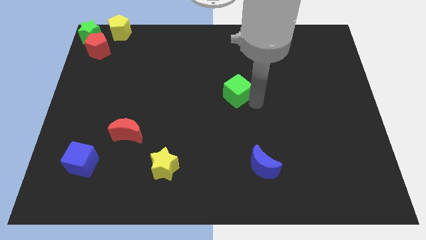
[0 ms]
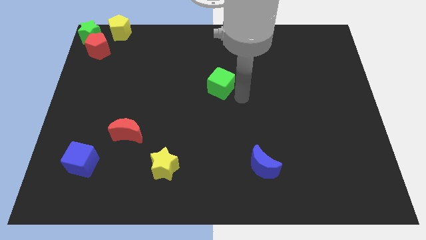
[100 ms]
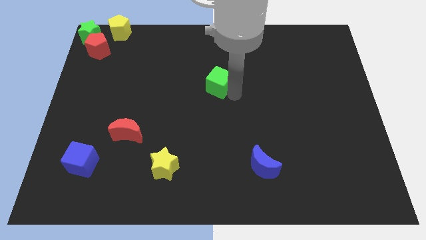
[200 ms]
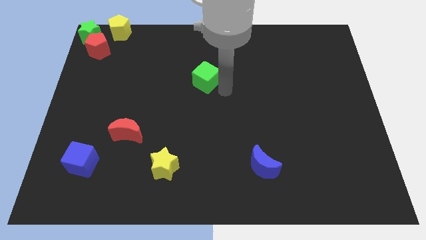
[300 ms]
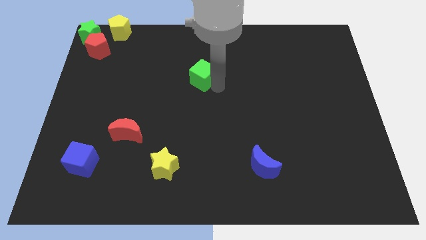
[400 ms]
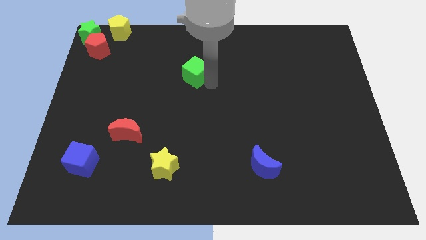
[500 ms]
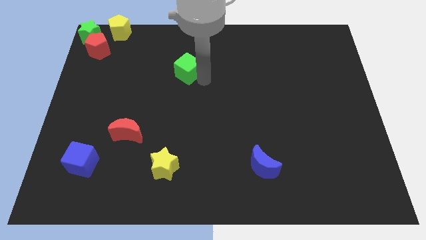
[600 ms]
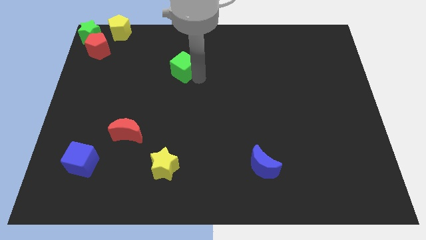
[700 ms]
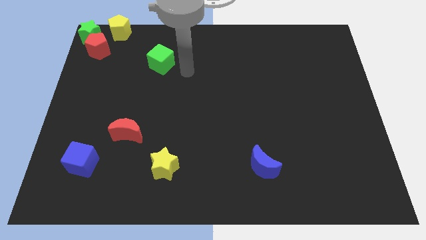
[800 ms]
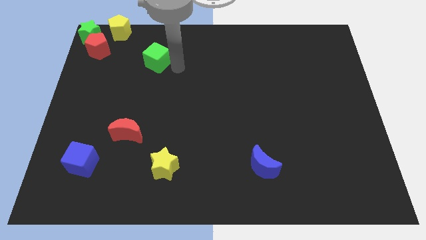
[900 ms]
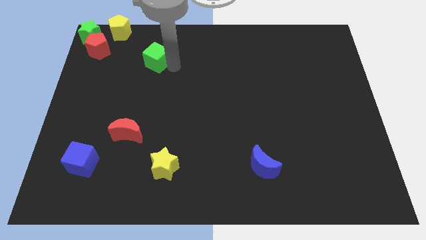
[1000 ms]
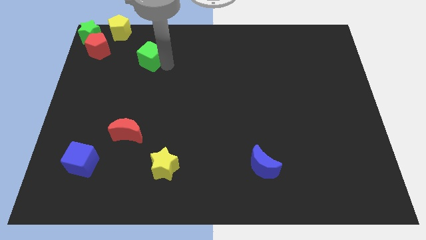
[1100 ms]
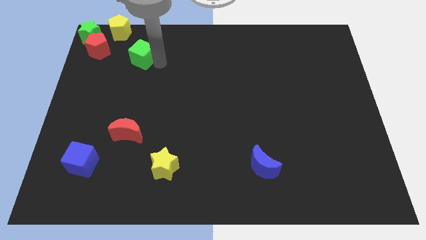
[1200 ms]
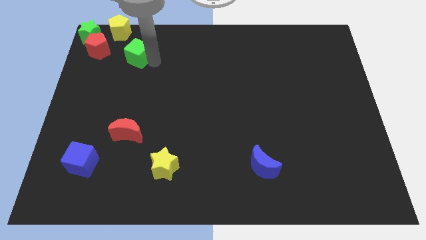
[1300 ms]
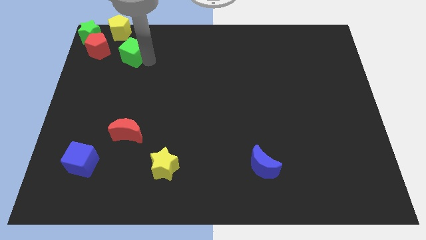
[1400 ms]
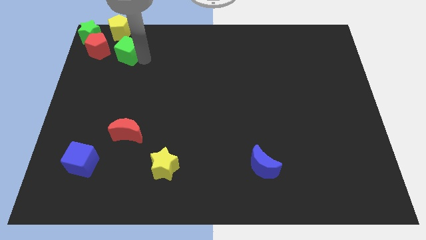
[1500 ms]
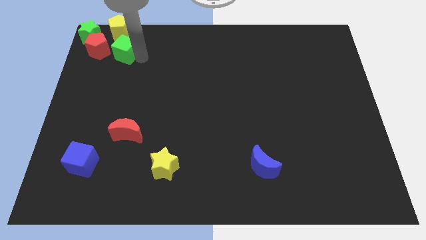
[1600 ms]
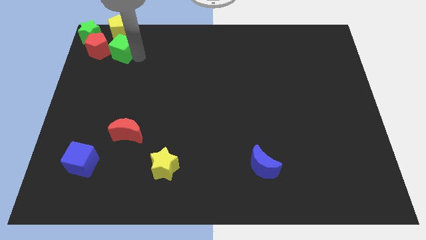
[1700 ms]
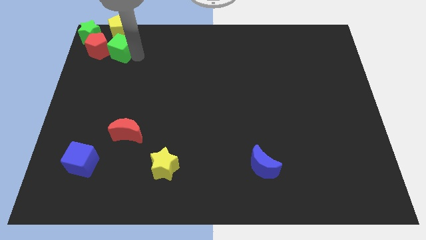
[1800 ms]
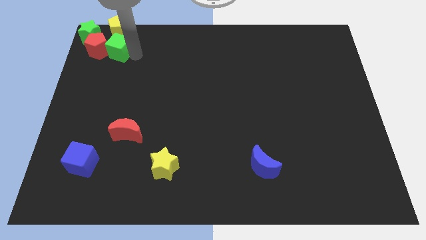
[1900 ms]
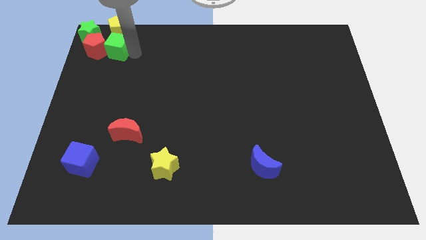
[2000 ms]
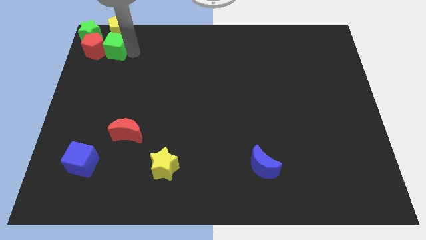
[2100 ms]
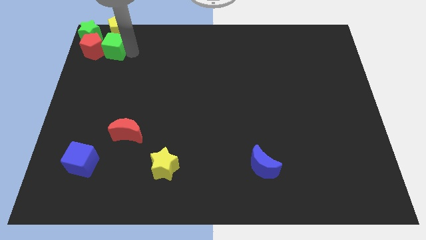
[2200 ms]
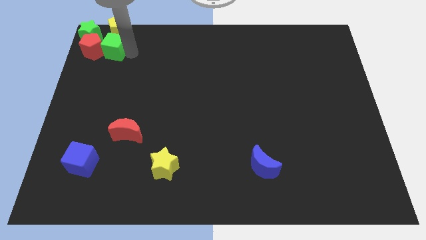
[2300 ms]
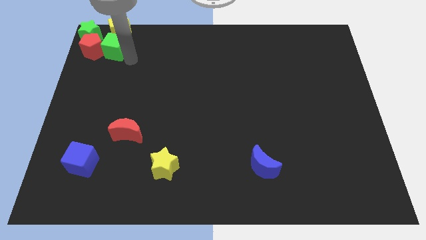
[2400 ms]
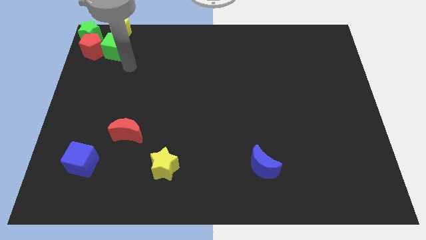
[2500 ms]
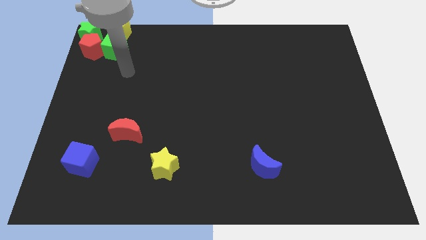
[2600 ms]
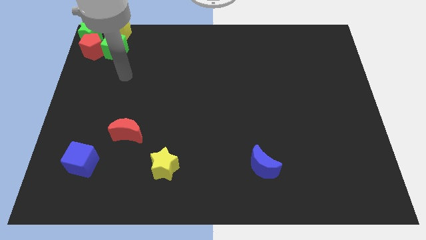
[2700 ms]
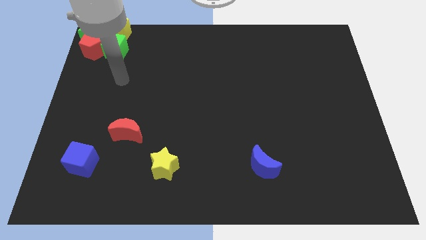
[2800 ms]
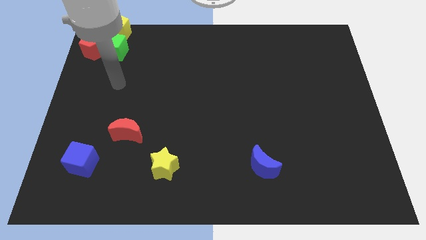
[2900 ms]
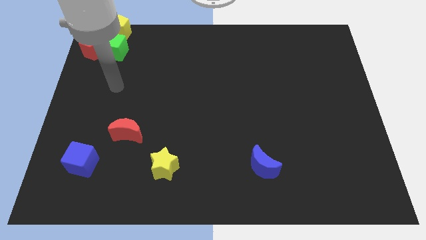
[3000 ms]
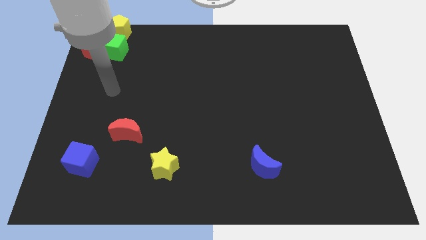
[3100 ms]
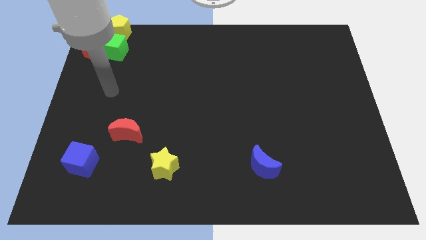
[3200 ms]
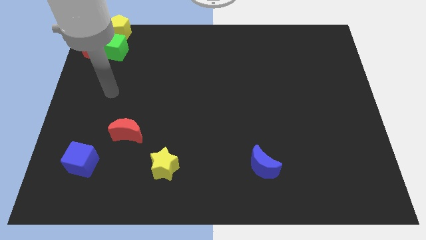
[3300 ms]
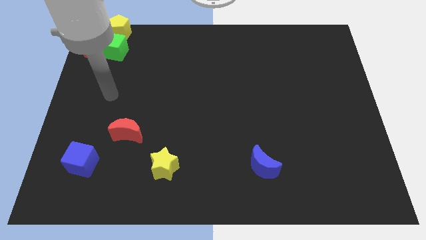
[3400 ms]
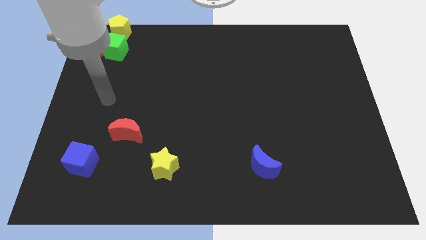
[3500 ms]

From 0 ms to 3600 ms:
move the green cube on the left side of the red pentagon

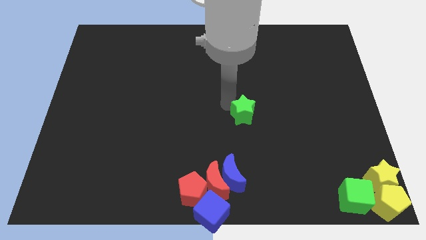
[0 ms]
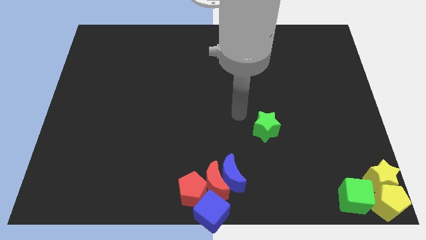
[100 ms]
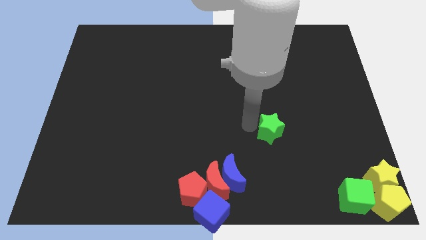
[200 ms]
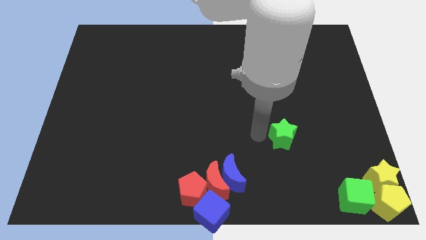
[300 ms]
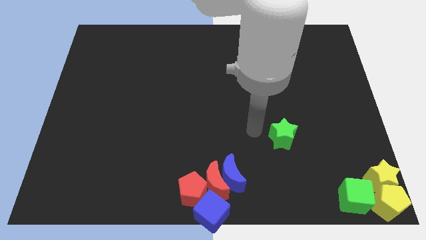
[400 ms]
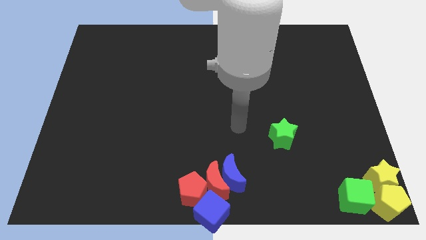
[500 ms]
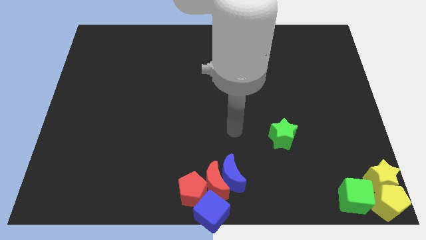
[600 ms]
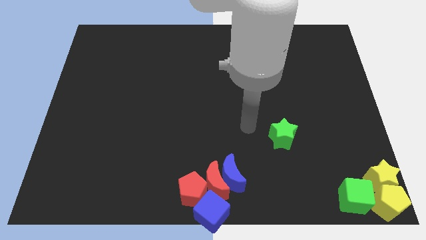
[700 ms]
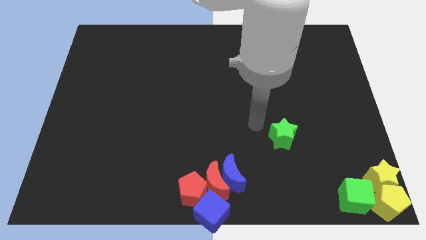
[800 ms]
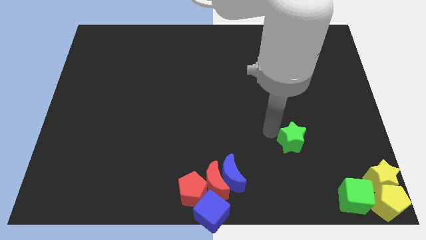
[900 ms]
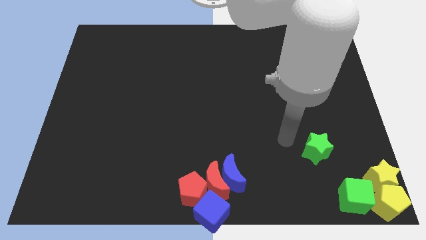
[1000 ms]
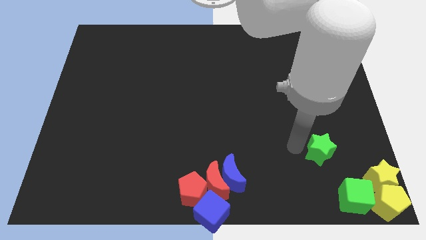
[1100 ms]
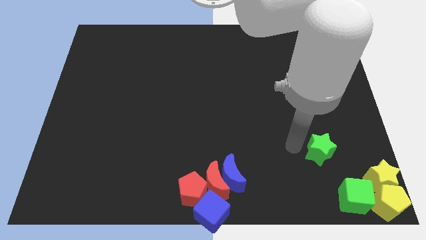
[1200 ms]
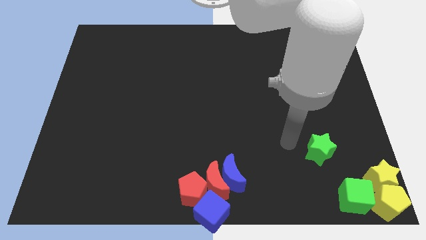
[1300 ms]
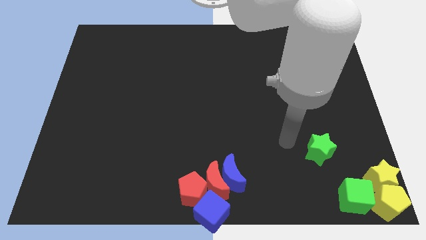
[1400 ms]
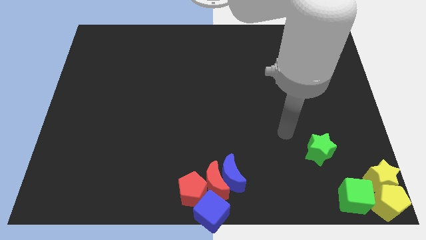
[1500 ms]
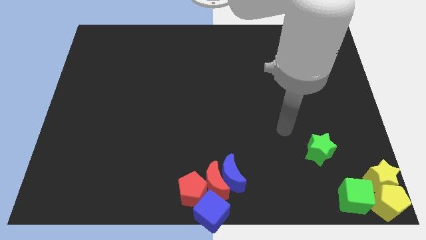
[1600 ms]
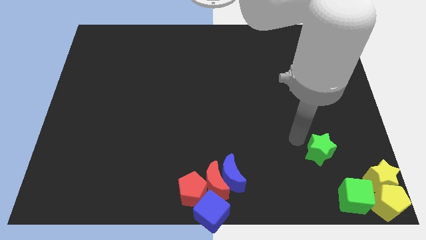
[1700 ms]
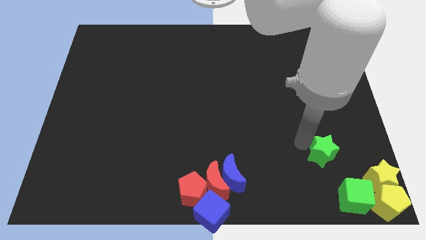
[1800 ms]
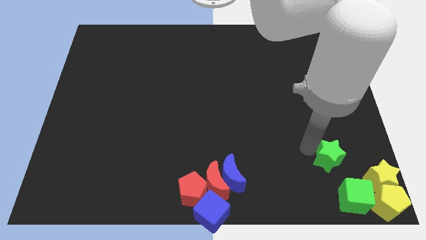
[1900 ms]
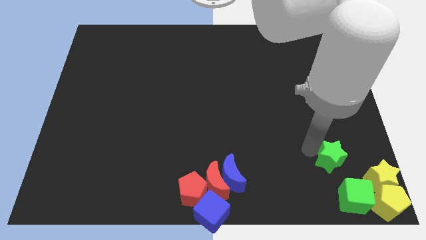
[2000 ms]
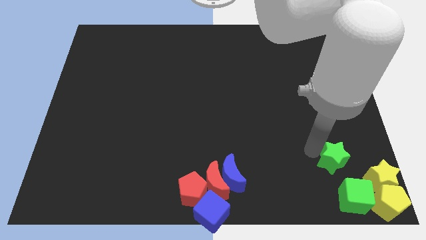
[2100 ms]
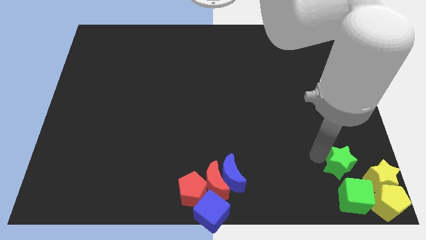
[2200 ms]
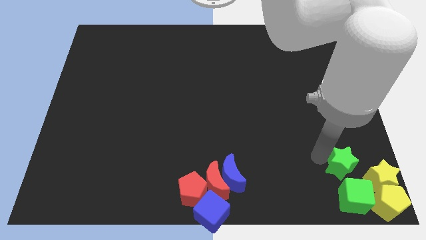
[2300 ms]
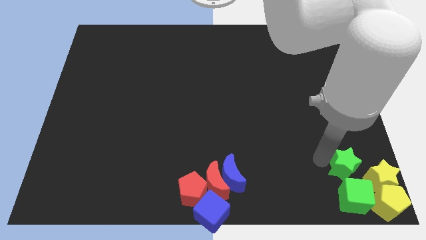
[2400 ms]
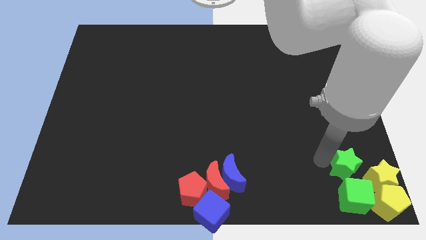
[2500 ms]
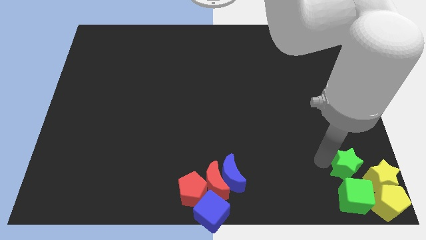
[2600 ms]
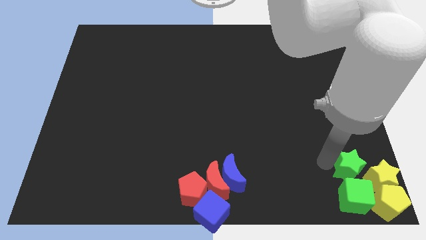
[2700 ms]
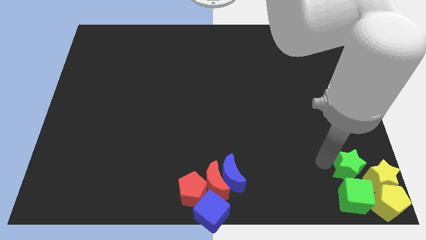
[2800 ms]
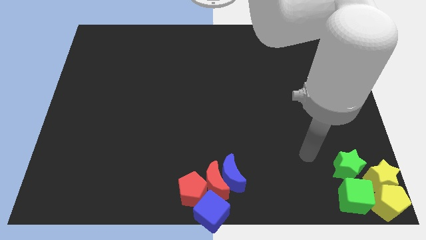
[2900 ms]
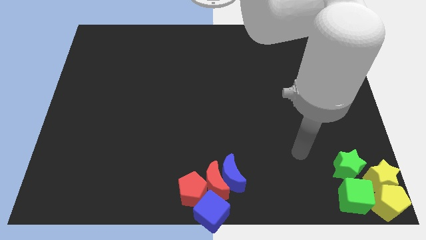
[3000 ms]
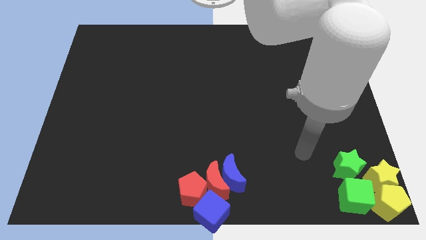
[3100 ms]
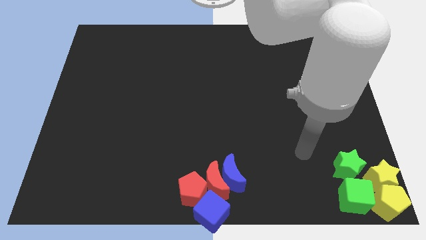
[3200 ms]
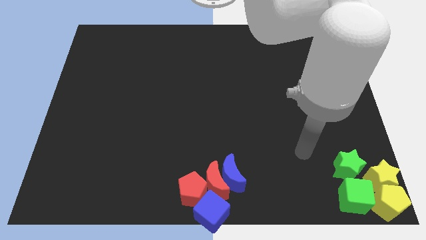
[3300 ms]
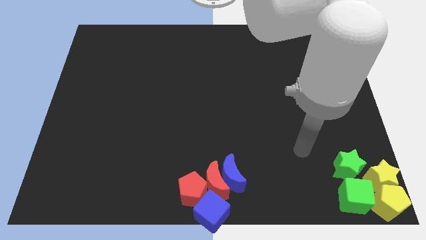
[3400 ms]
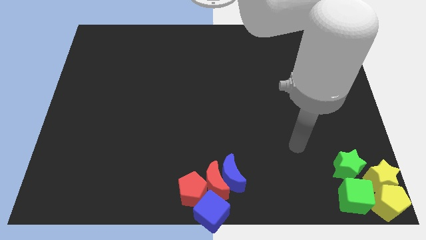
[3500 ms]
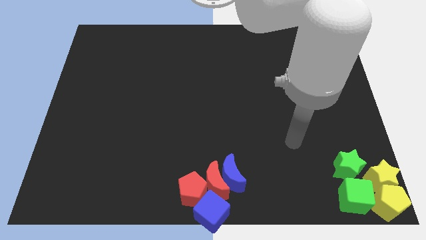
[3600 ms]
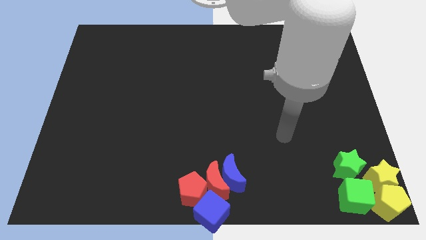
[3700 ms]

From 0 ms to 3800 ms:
move the yellow star to the top side of the green cube

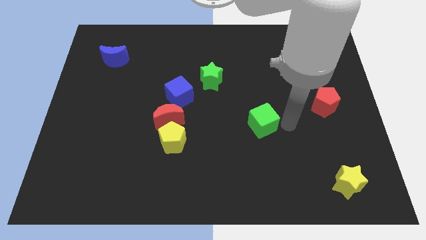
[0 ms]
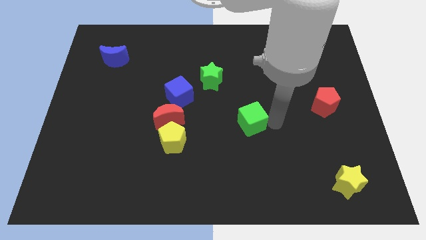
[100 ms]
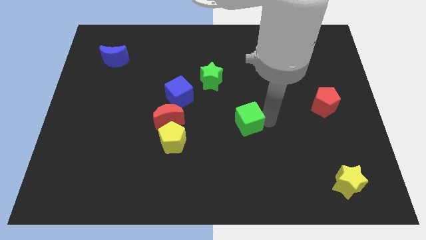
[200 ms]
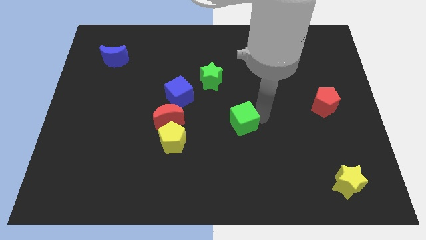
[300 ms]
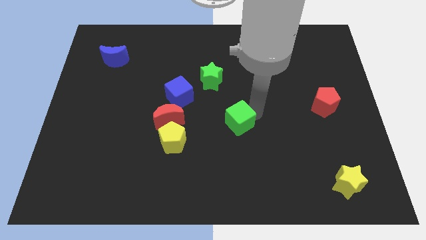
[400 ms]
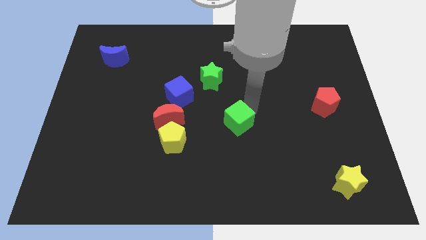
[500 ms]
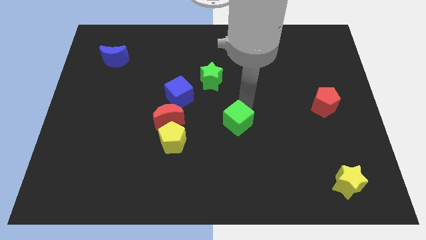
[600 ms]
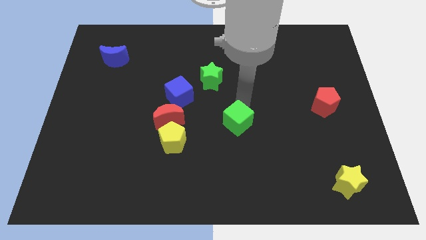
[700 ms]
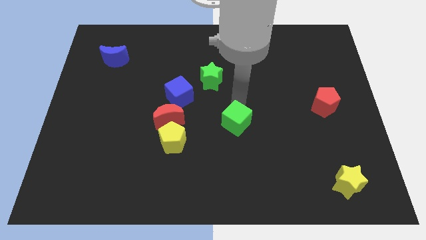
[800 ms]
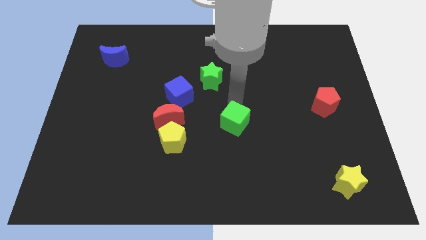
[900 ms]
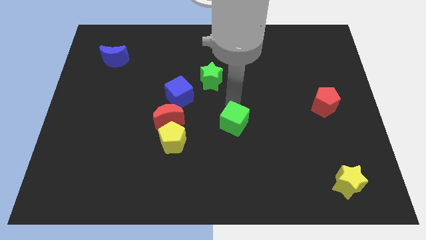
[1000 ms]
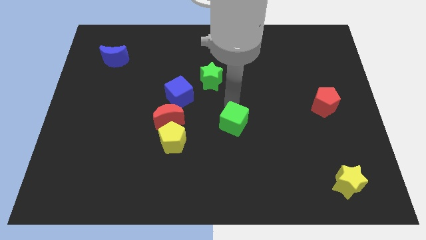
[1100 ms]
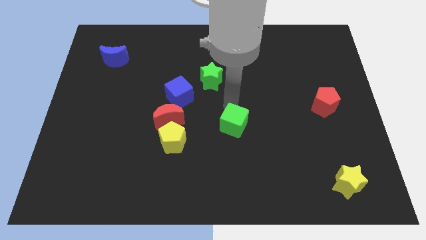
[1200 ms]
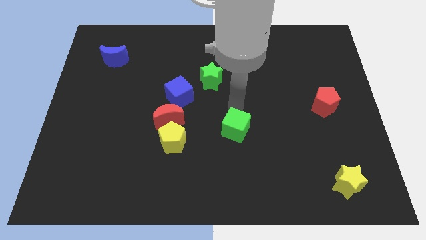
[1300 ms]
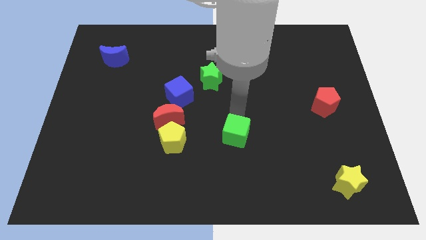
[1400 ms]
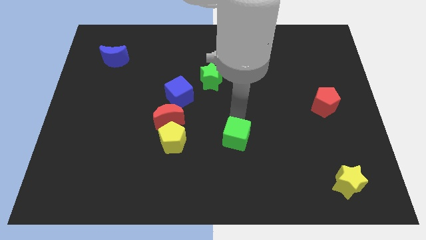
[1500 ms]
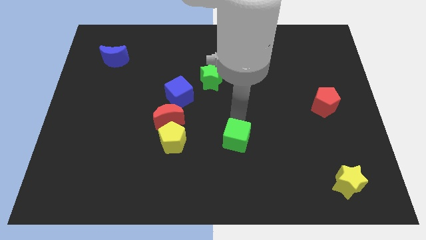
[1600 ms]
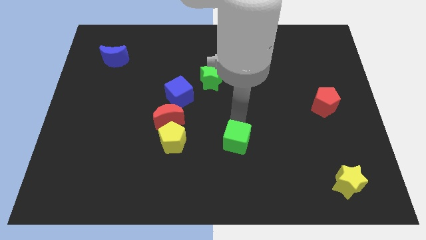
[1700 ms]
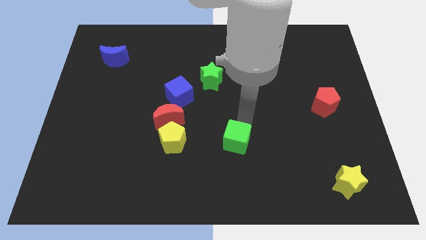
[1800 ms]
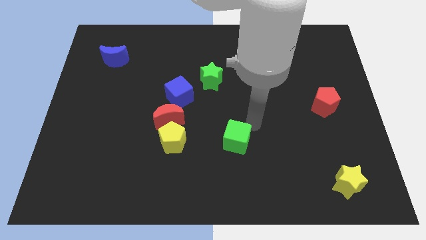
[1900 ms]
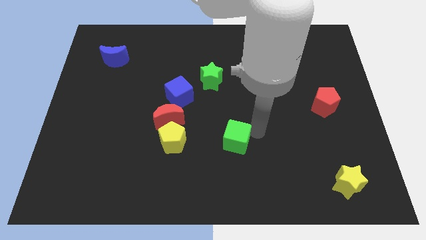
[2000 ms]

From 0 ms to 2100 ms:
move the green cube to the right of the yellow pentagon
